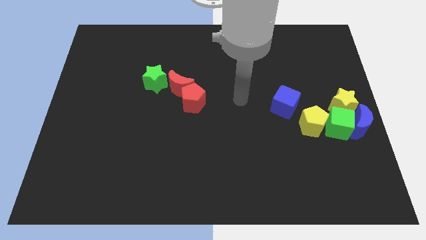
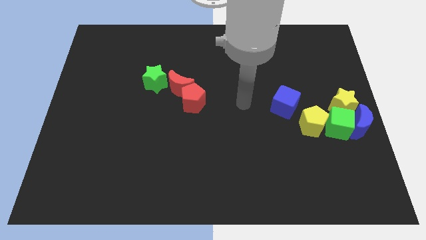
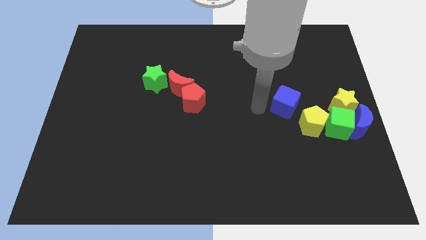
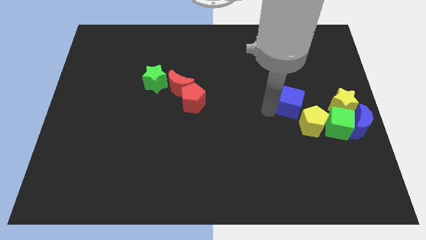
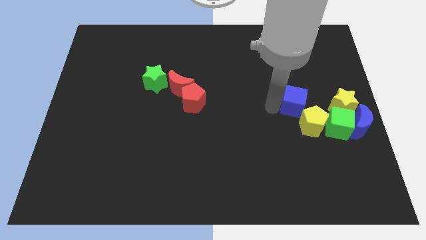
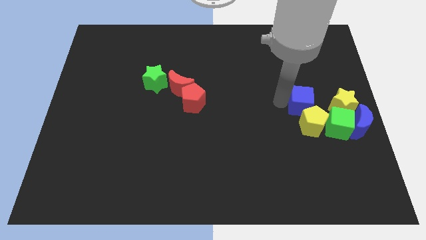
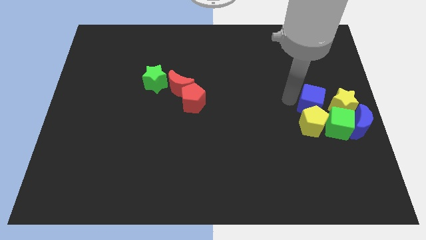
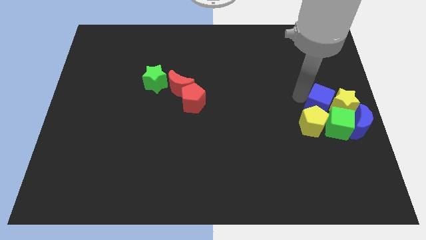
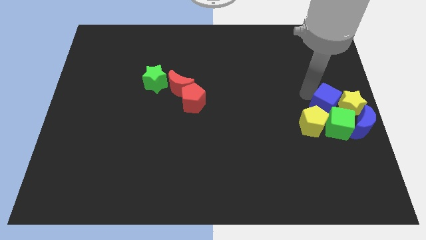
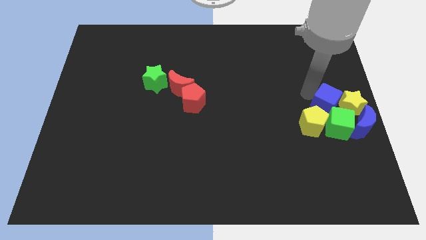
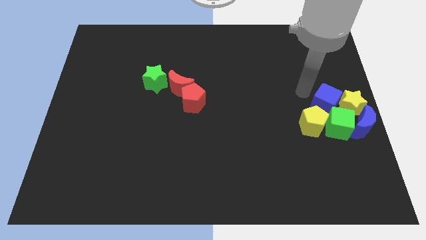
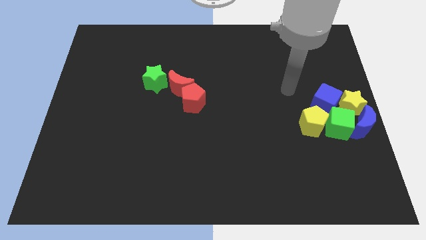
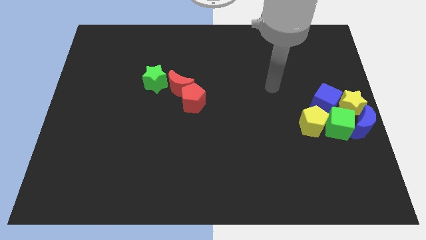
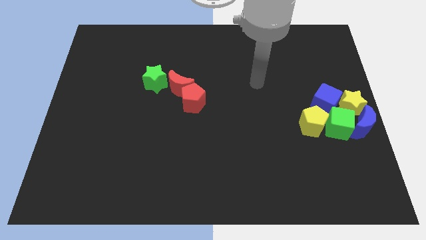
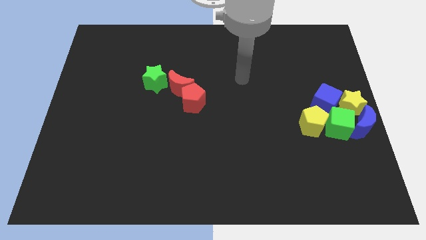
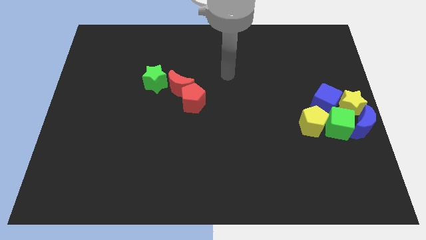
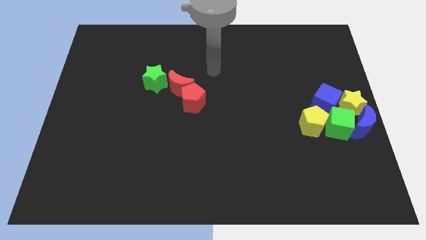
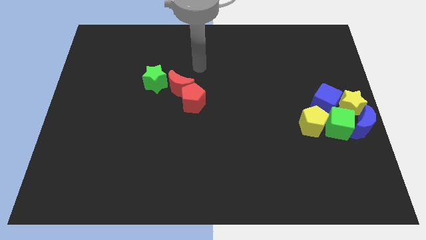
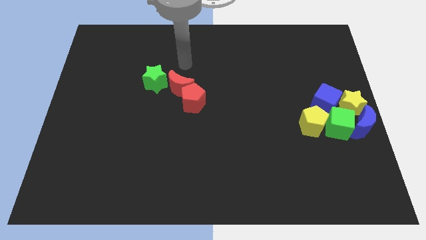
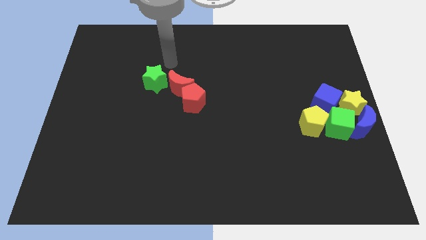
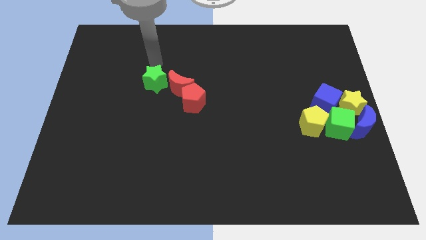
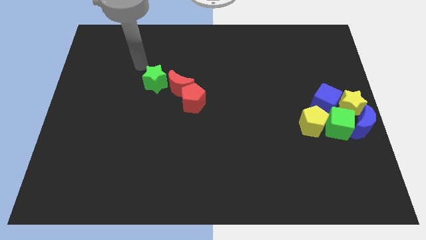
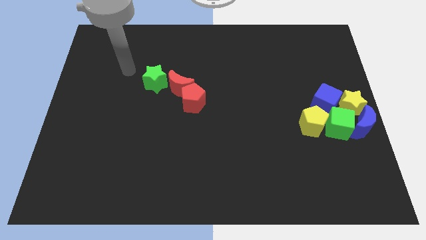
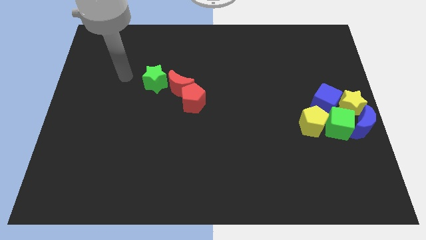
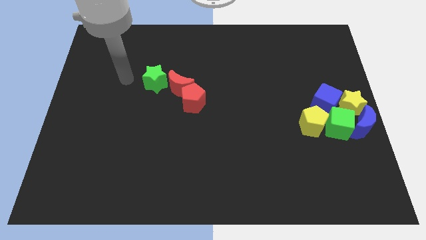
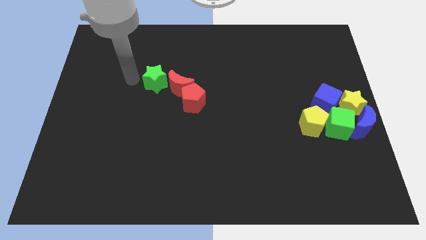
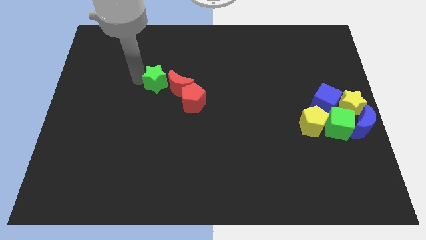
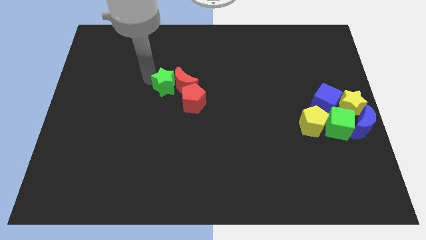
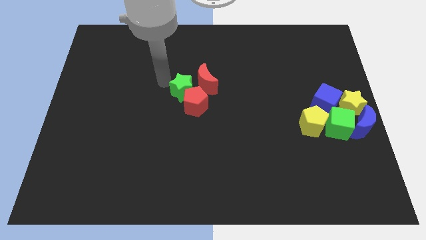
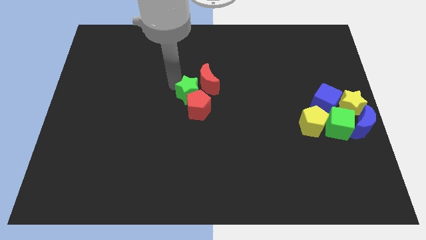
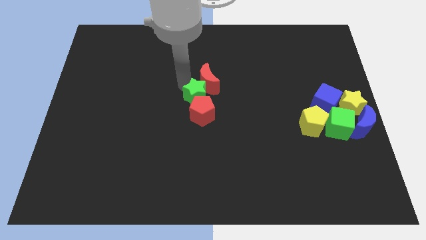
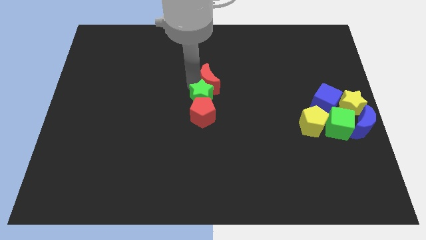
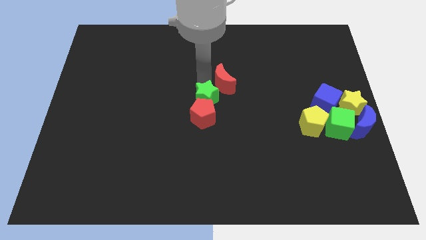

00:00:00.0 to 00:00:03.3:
push green star above red pentagon

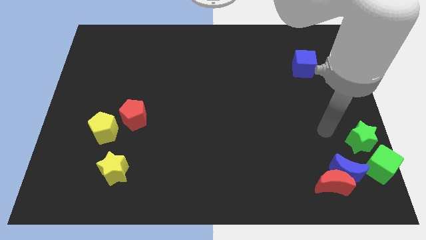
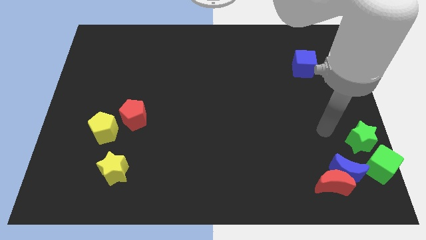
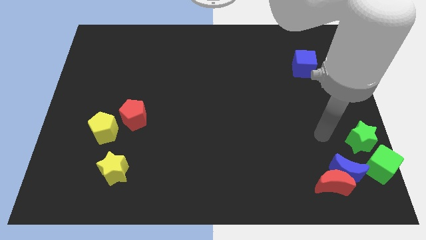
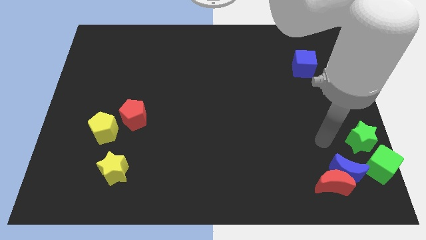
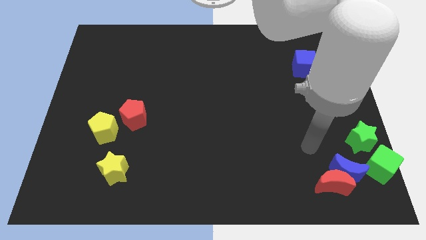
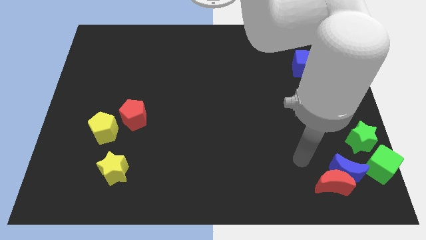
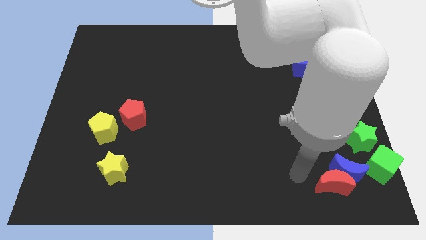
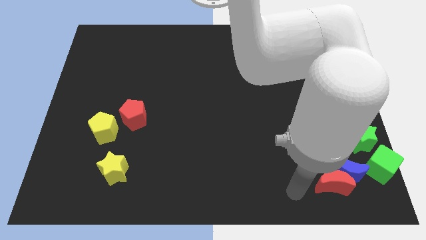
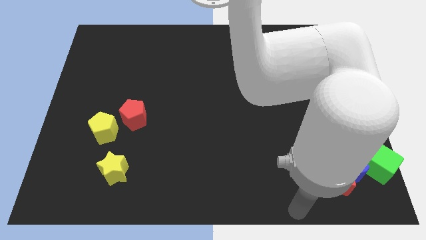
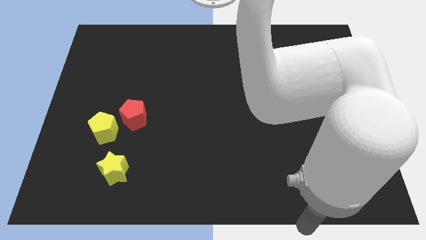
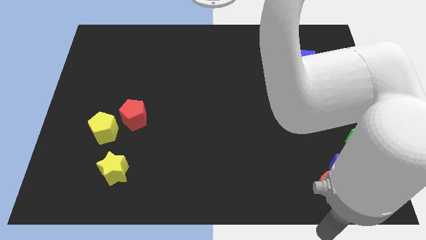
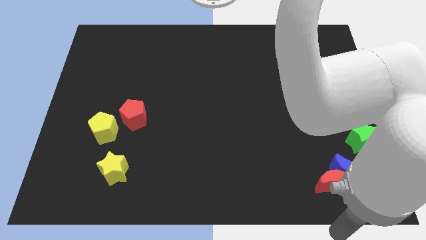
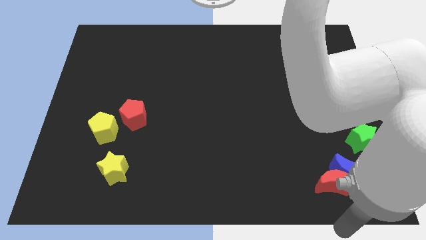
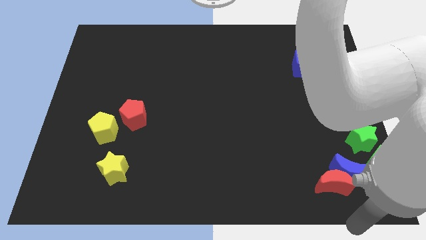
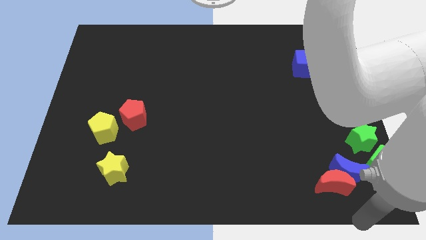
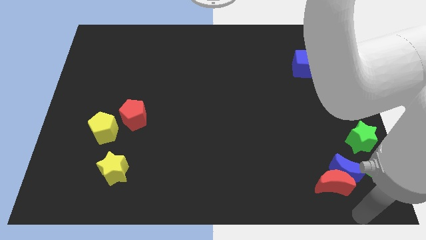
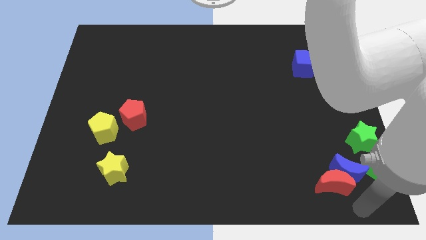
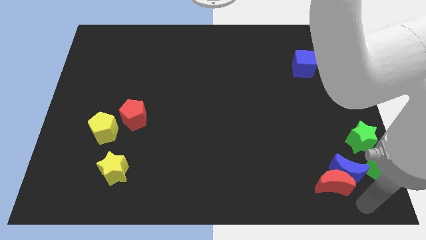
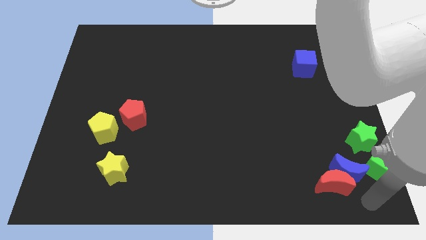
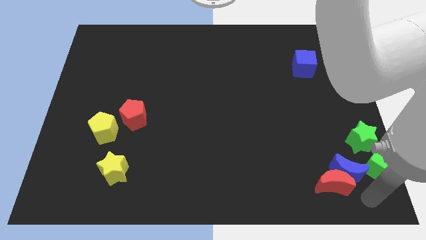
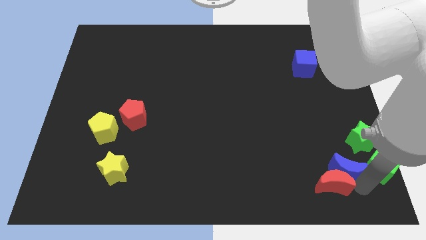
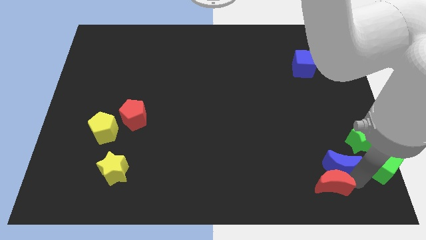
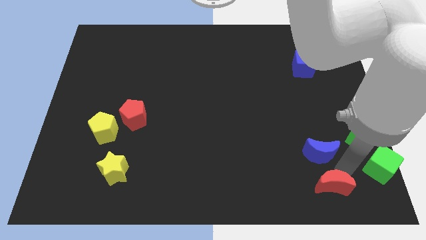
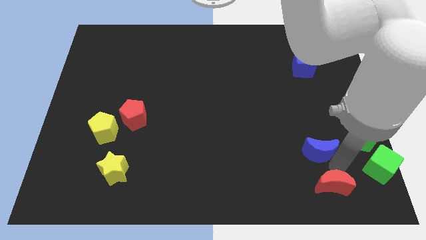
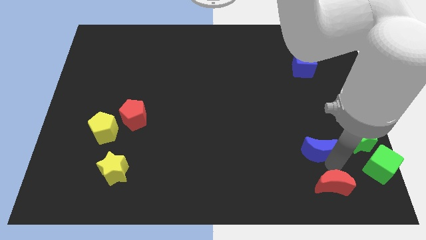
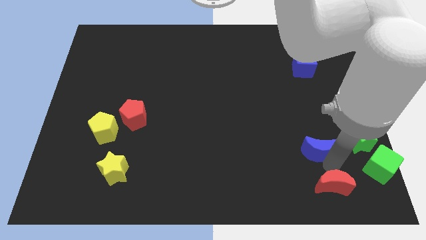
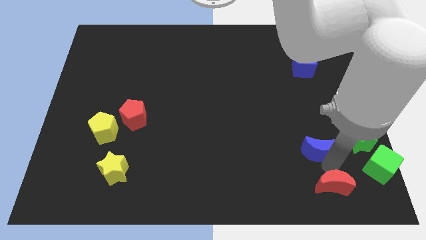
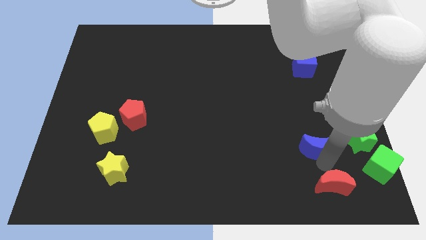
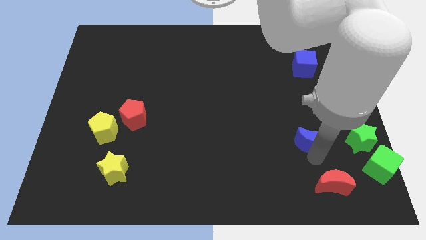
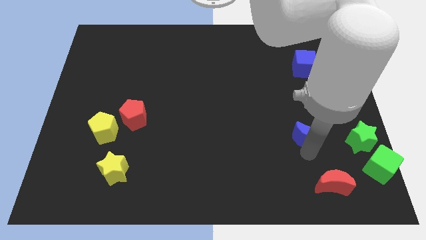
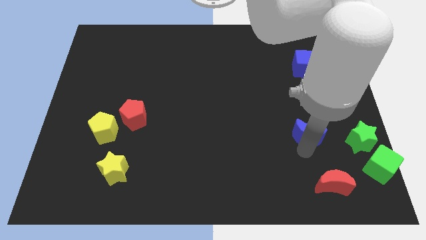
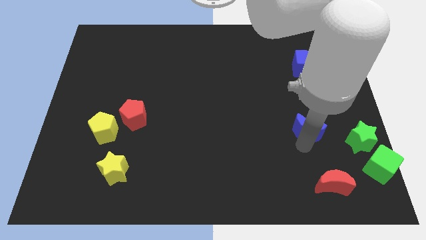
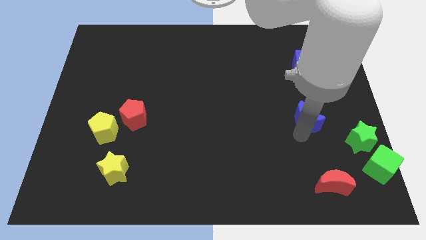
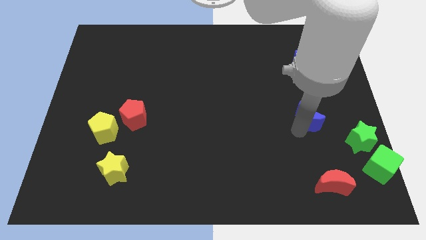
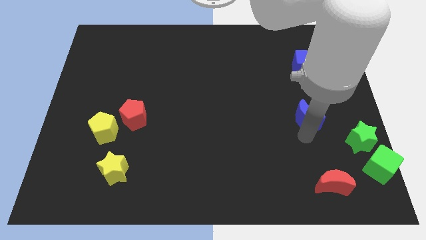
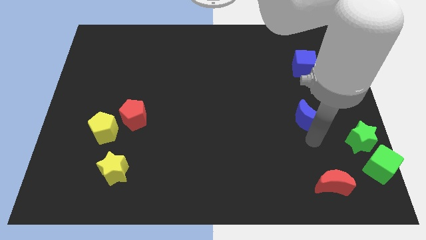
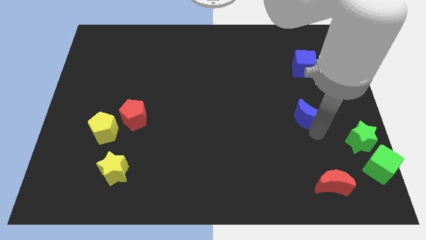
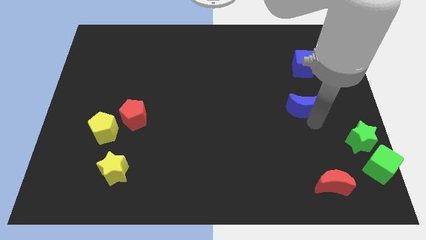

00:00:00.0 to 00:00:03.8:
move blue crescent vertically to the bottom of the blue cube

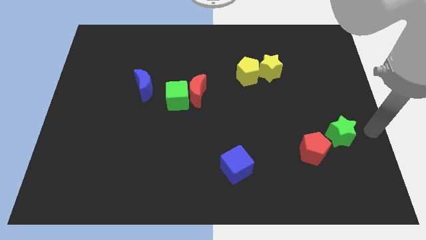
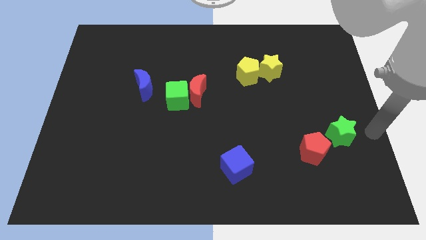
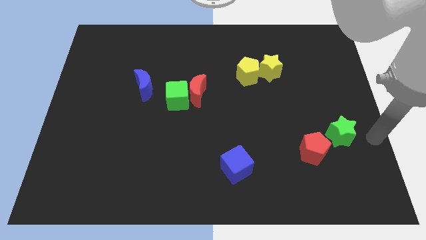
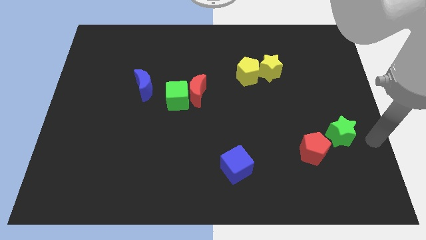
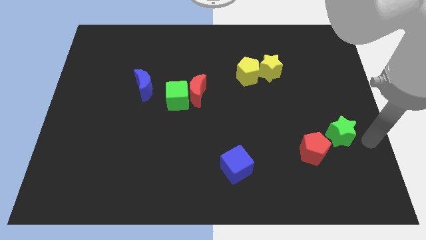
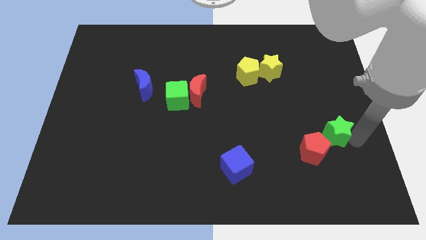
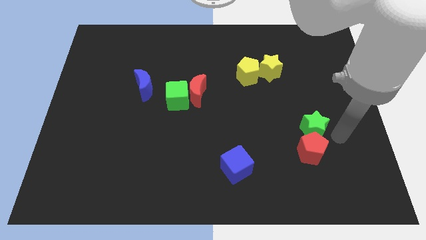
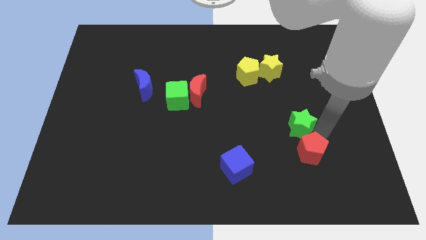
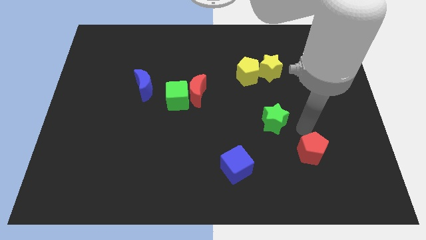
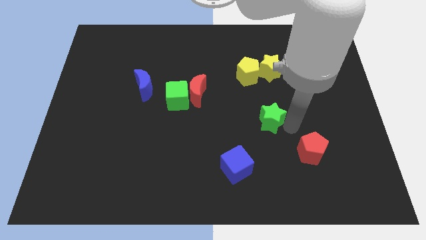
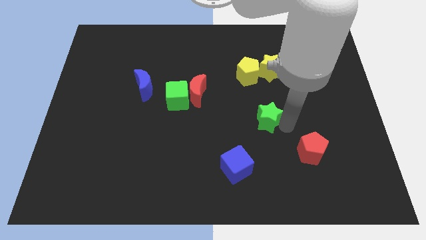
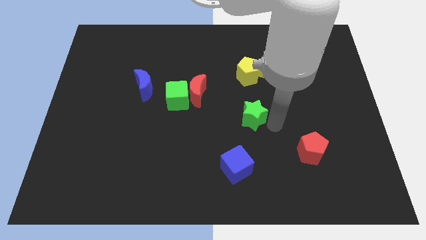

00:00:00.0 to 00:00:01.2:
push the green star below the yellow pentagon

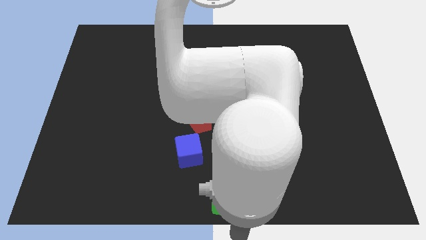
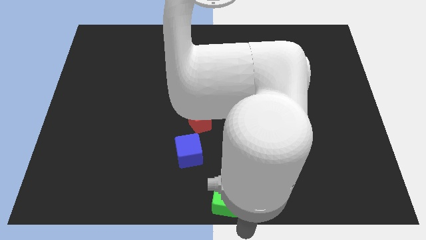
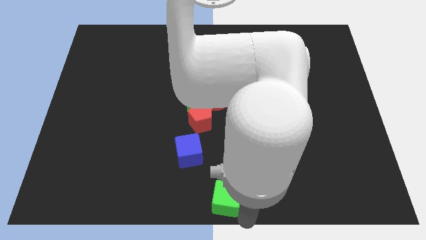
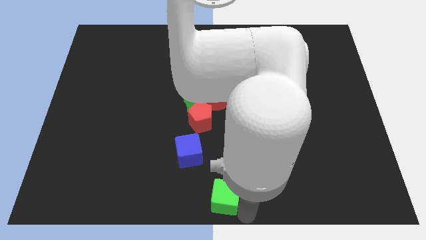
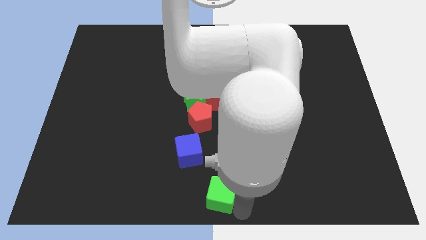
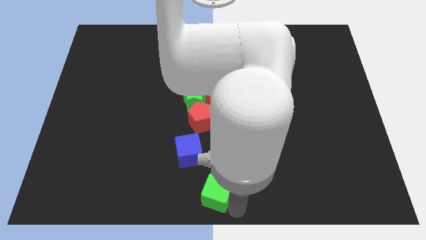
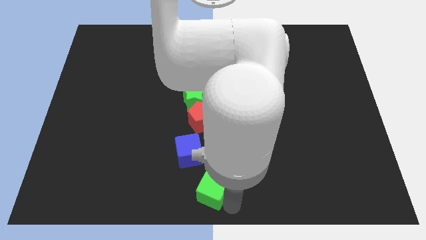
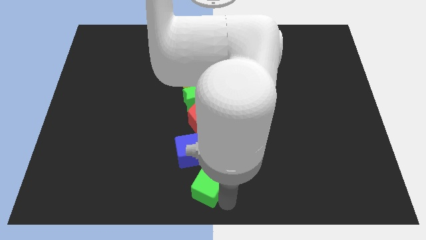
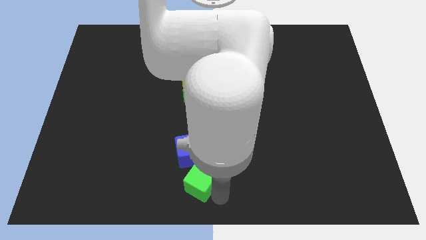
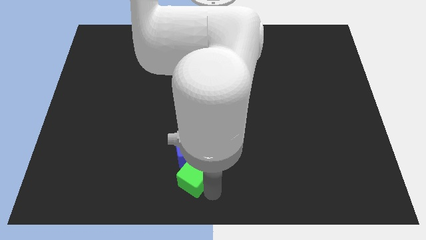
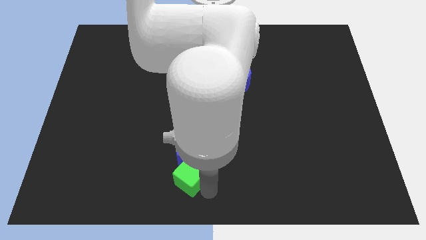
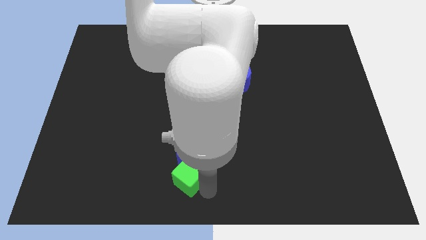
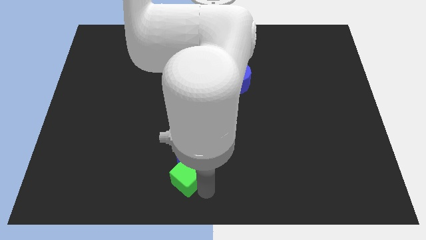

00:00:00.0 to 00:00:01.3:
place the green cube below the blue cube
